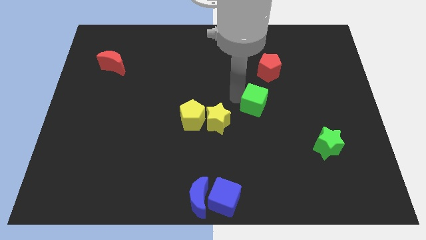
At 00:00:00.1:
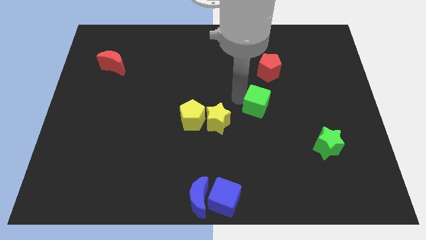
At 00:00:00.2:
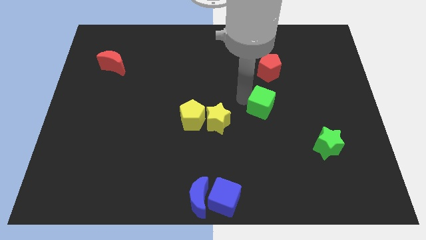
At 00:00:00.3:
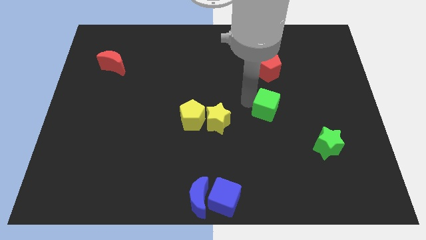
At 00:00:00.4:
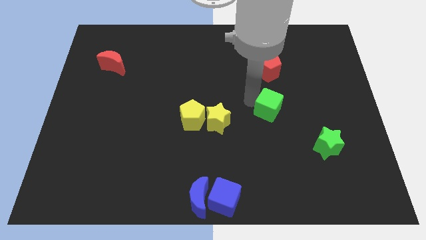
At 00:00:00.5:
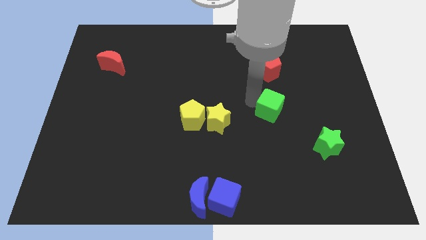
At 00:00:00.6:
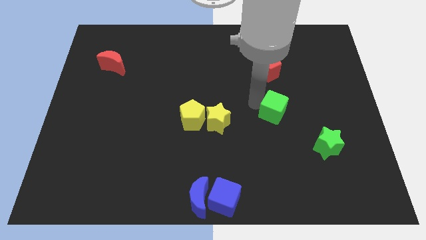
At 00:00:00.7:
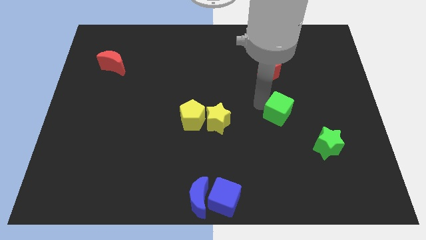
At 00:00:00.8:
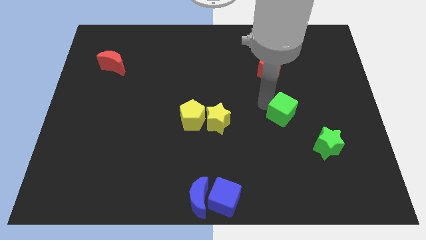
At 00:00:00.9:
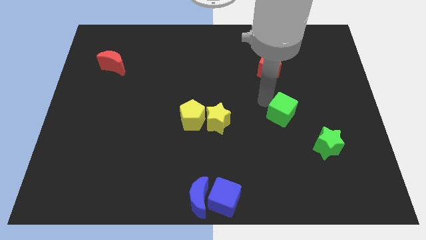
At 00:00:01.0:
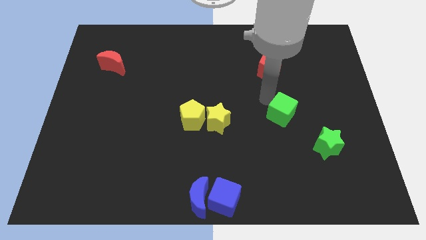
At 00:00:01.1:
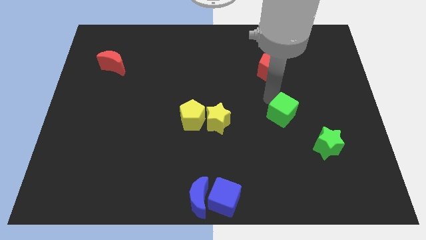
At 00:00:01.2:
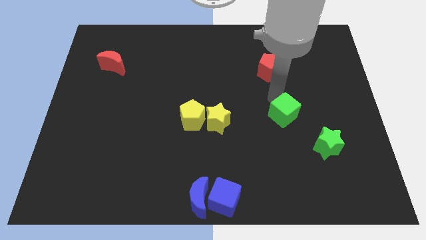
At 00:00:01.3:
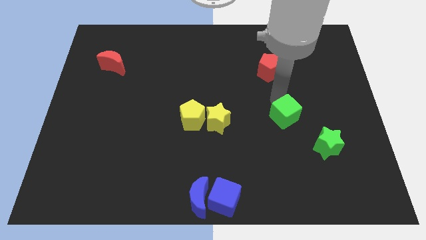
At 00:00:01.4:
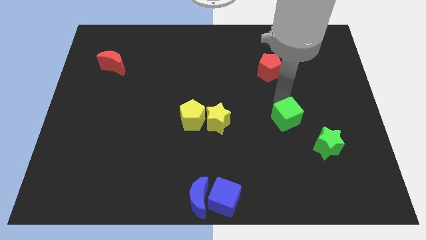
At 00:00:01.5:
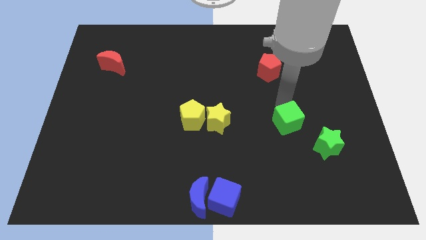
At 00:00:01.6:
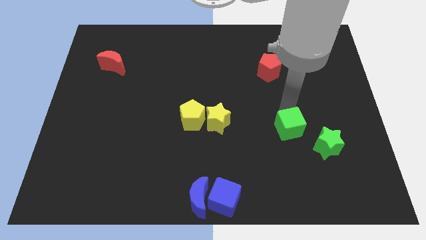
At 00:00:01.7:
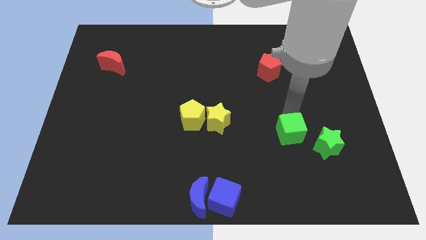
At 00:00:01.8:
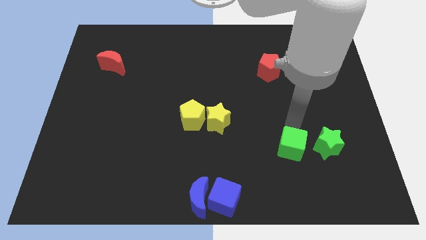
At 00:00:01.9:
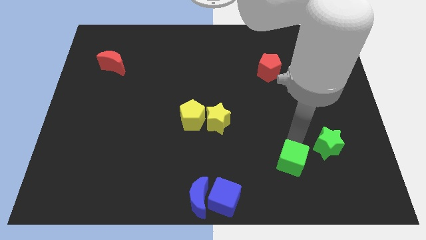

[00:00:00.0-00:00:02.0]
place the green cube to the bottom left of the green star

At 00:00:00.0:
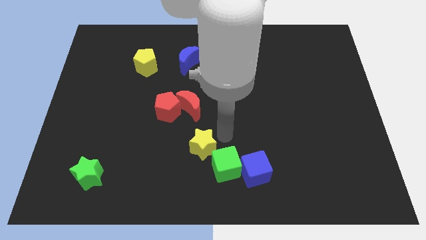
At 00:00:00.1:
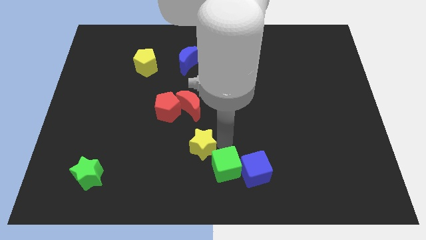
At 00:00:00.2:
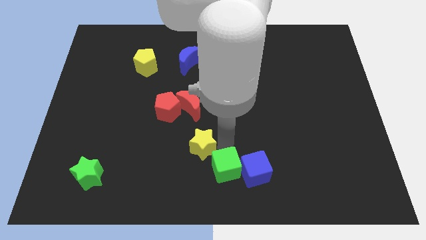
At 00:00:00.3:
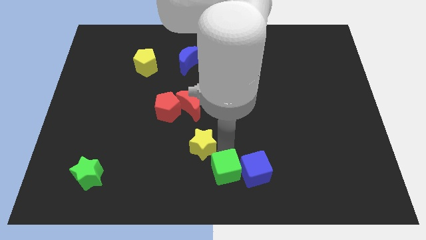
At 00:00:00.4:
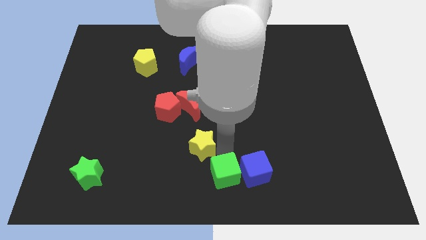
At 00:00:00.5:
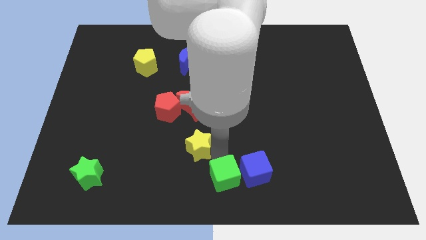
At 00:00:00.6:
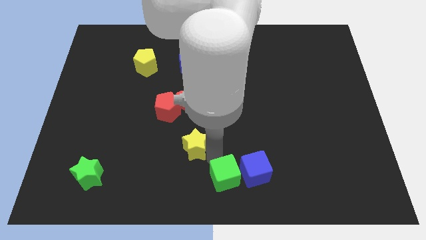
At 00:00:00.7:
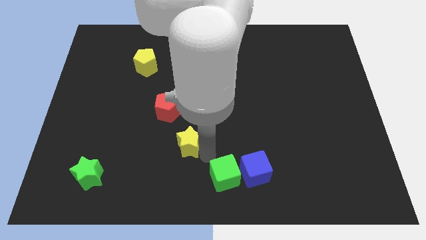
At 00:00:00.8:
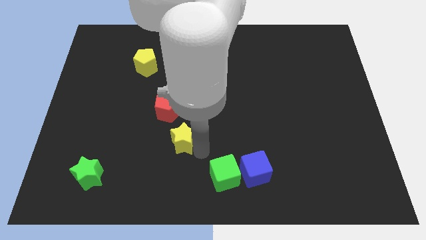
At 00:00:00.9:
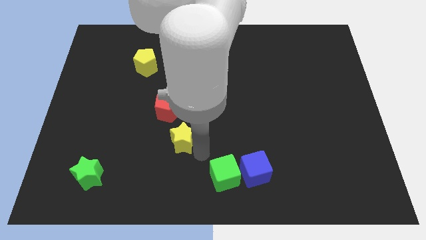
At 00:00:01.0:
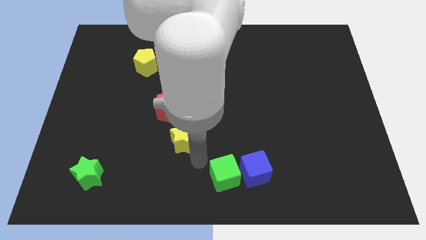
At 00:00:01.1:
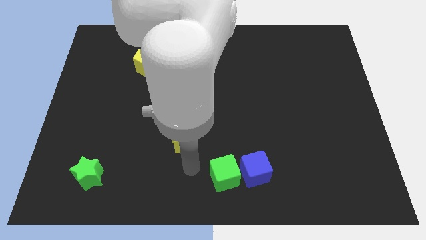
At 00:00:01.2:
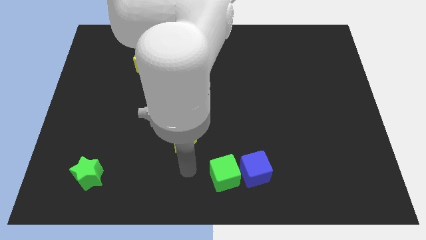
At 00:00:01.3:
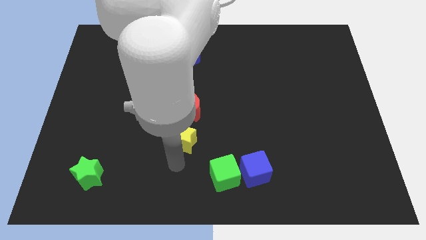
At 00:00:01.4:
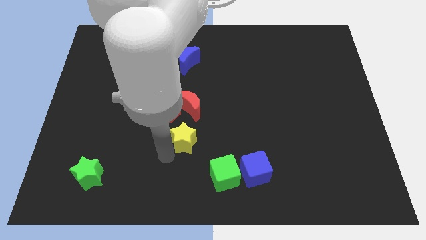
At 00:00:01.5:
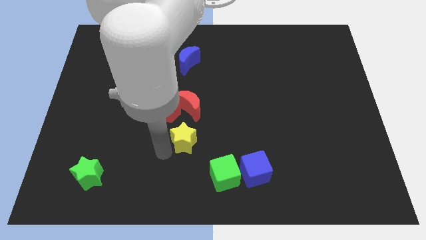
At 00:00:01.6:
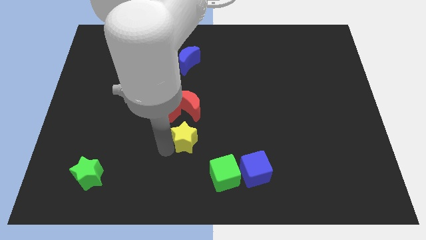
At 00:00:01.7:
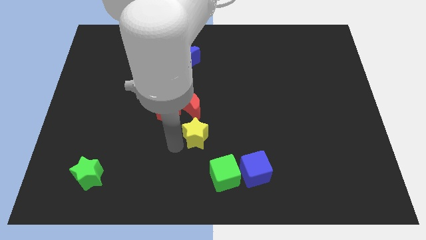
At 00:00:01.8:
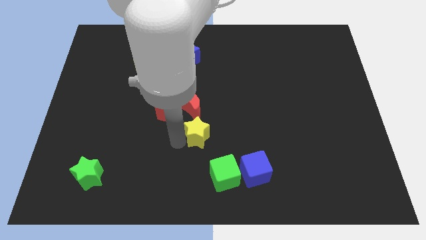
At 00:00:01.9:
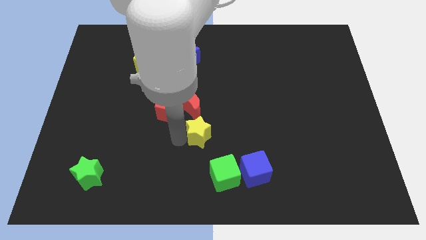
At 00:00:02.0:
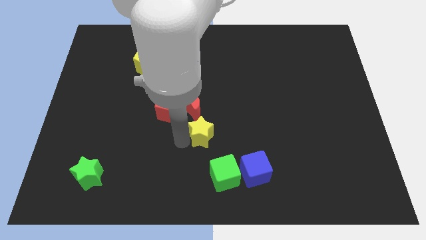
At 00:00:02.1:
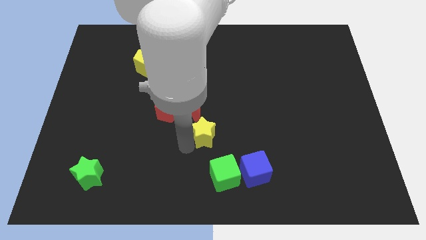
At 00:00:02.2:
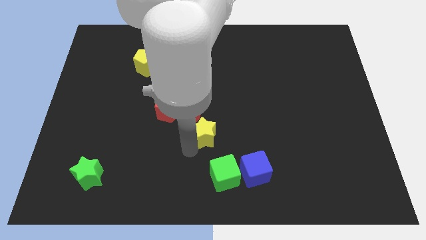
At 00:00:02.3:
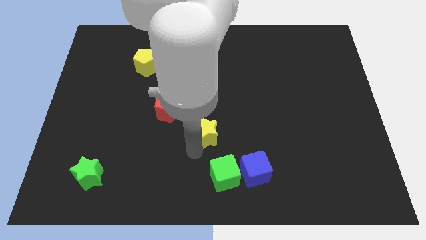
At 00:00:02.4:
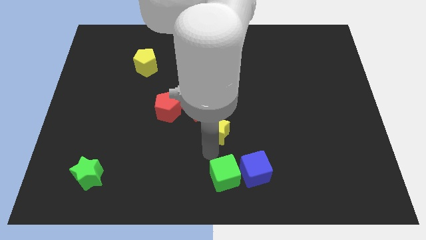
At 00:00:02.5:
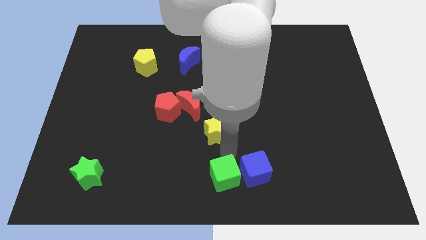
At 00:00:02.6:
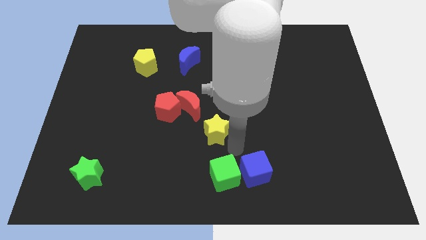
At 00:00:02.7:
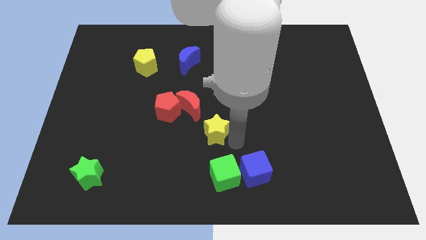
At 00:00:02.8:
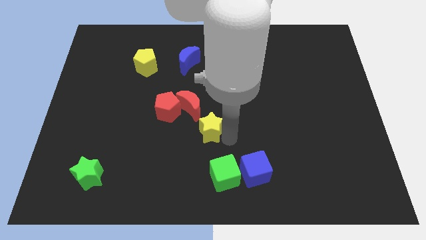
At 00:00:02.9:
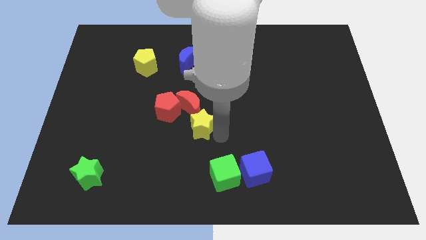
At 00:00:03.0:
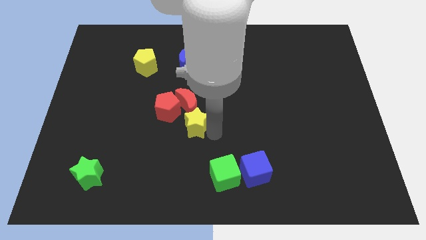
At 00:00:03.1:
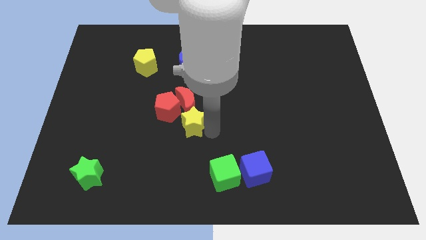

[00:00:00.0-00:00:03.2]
push yellow star near to red crescent

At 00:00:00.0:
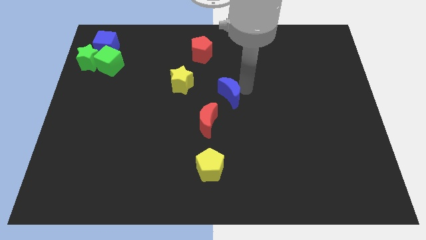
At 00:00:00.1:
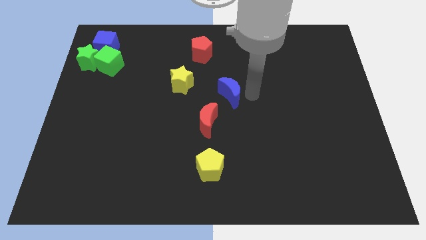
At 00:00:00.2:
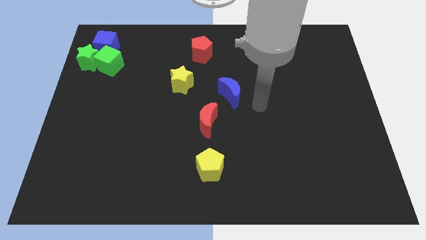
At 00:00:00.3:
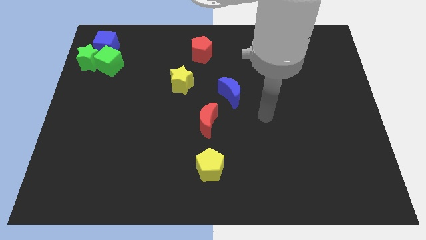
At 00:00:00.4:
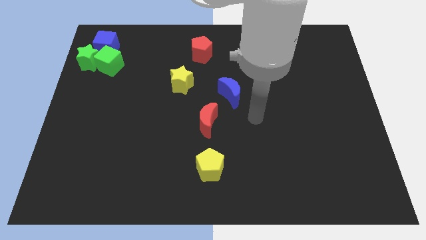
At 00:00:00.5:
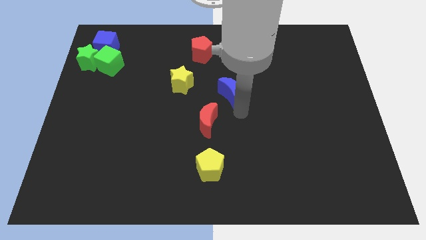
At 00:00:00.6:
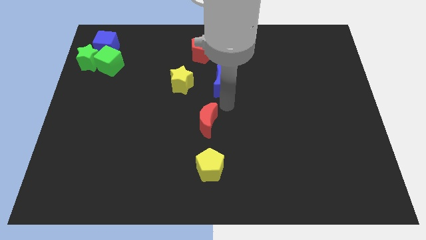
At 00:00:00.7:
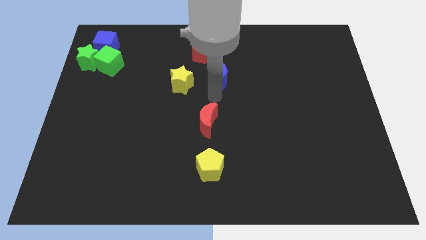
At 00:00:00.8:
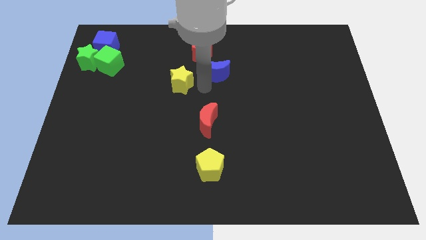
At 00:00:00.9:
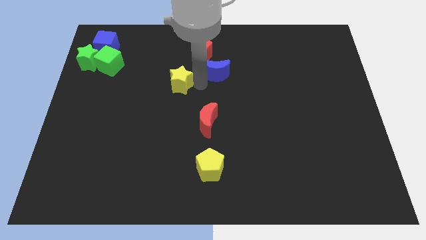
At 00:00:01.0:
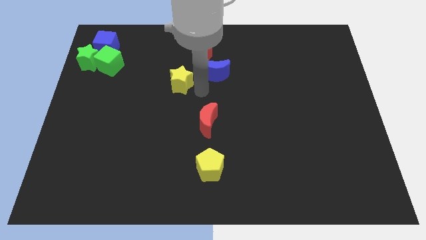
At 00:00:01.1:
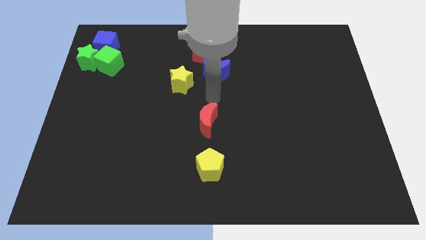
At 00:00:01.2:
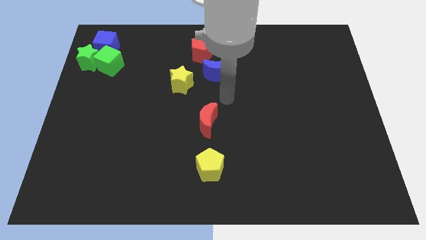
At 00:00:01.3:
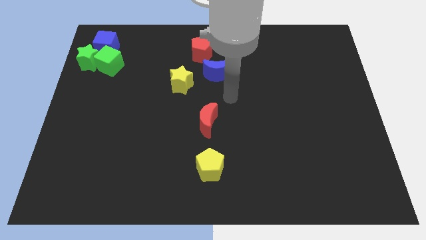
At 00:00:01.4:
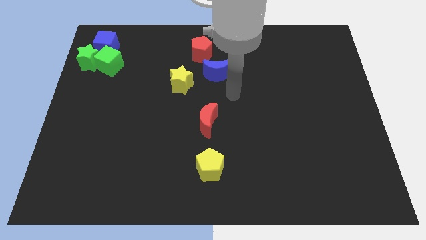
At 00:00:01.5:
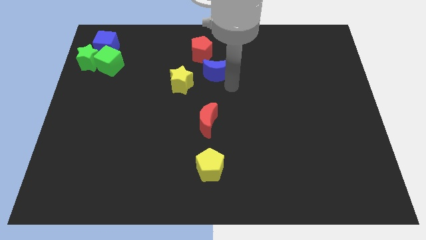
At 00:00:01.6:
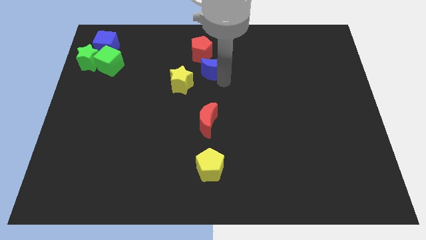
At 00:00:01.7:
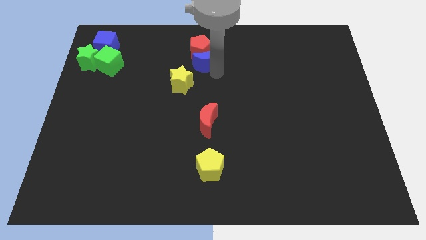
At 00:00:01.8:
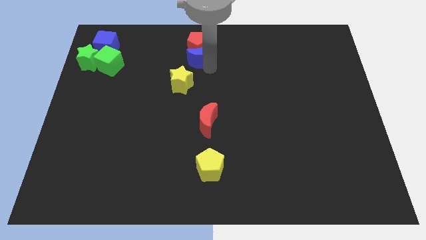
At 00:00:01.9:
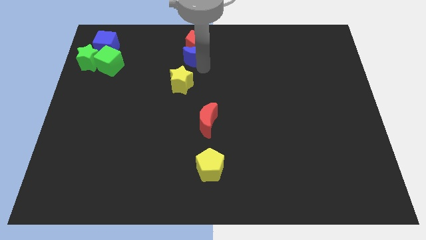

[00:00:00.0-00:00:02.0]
move blue moon into red pentagon

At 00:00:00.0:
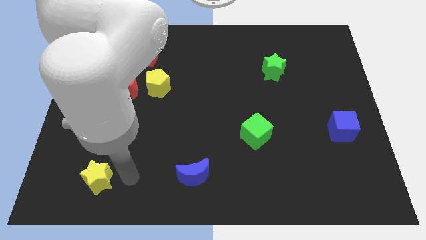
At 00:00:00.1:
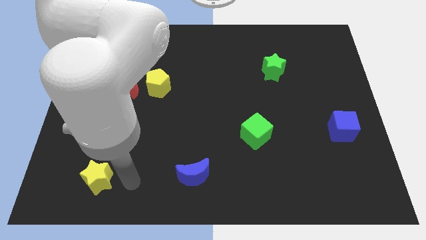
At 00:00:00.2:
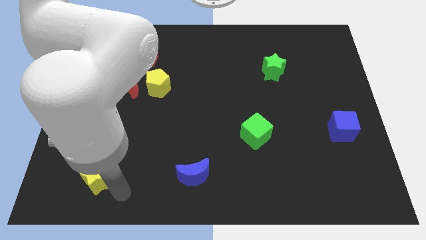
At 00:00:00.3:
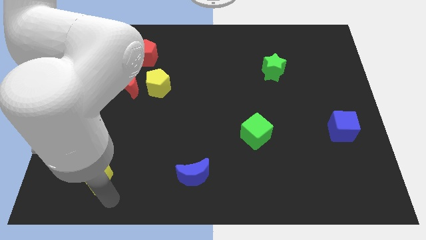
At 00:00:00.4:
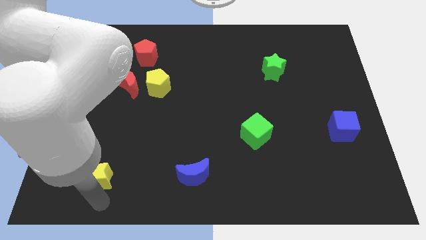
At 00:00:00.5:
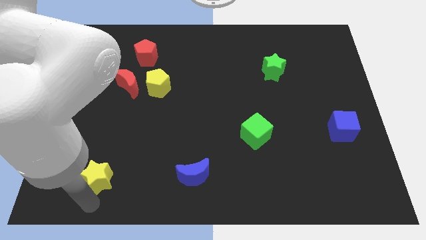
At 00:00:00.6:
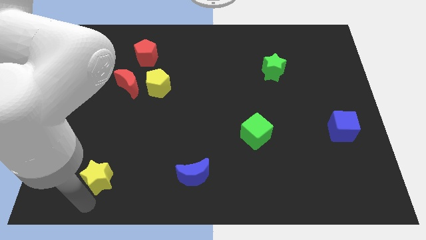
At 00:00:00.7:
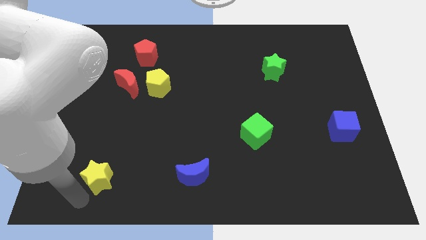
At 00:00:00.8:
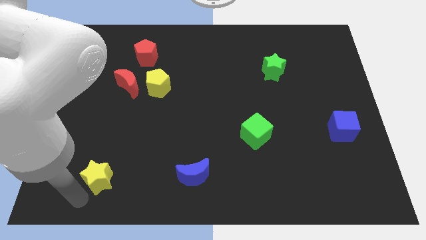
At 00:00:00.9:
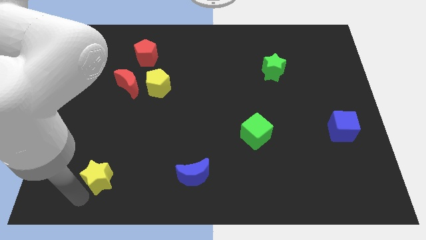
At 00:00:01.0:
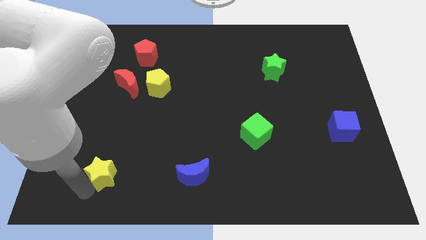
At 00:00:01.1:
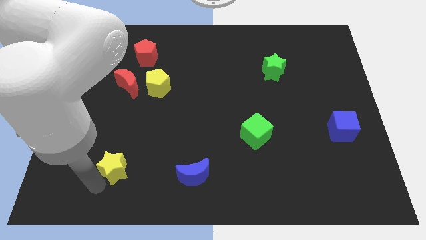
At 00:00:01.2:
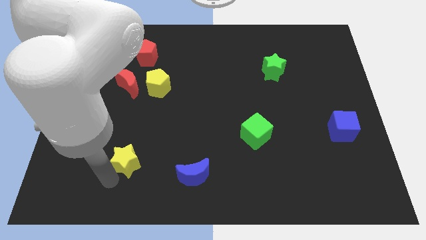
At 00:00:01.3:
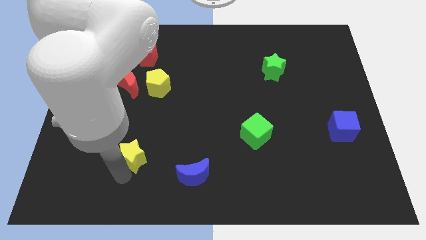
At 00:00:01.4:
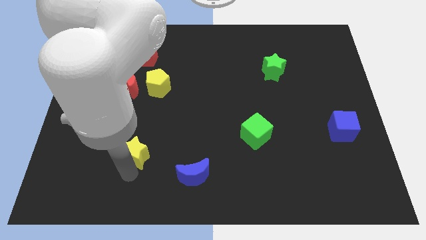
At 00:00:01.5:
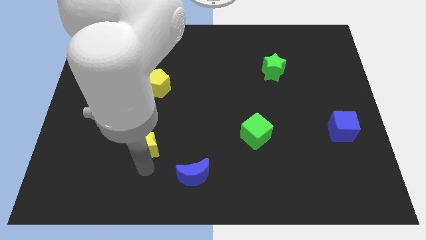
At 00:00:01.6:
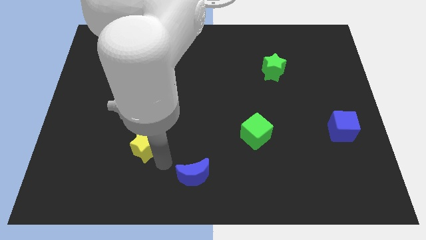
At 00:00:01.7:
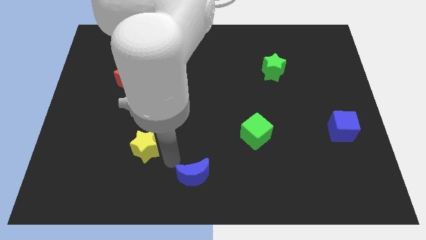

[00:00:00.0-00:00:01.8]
push the yellow star upwards slightly
